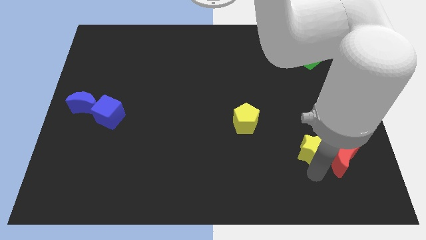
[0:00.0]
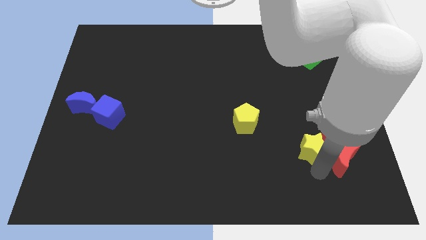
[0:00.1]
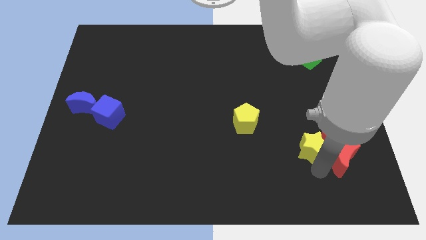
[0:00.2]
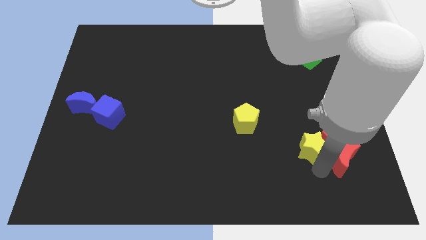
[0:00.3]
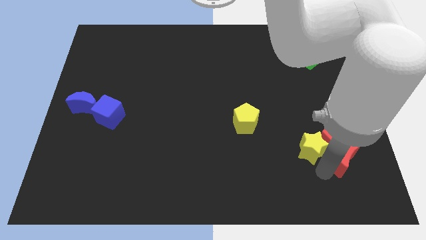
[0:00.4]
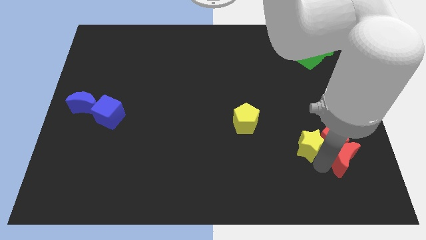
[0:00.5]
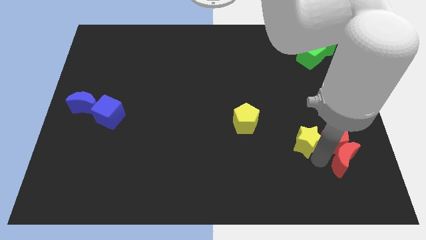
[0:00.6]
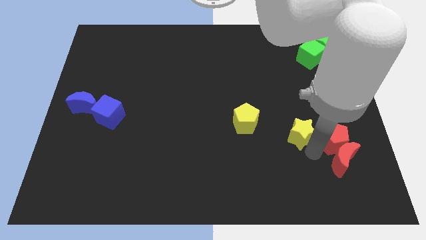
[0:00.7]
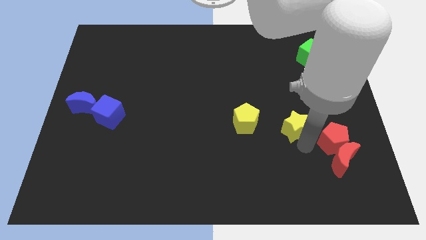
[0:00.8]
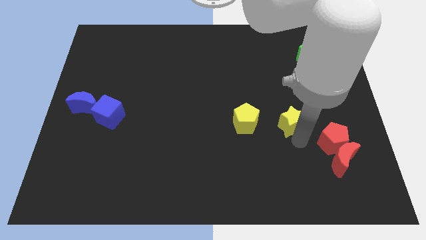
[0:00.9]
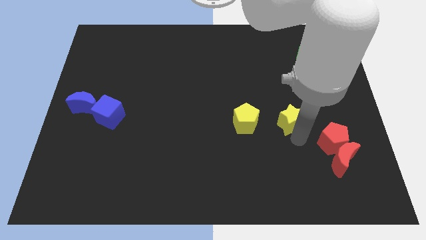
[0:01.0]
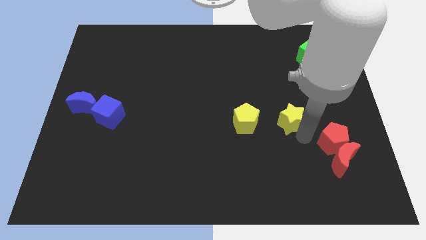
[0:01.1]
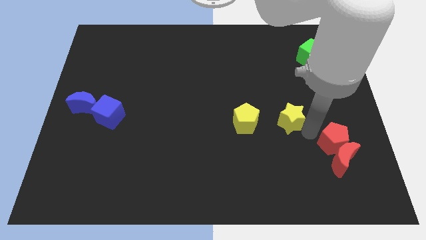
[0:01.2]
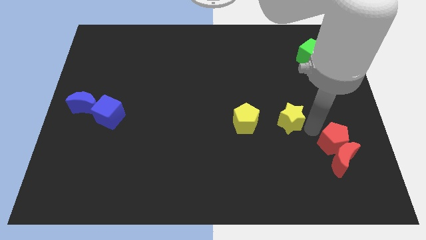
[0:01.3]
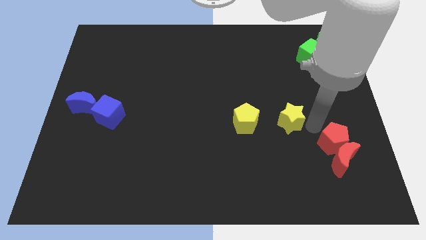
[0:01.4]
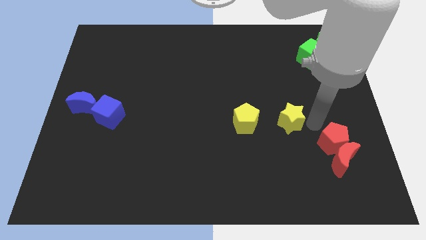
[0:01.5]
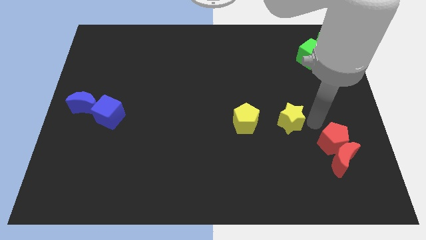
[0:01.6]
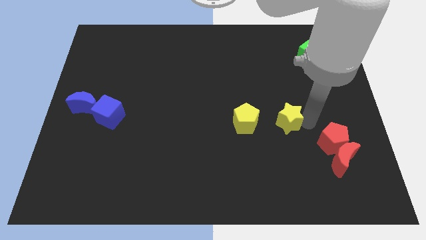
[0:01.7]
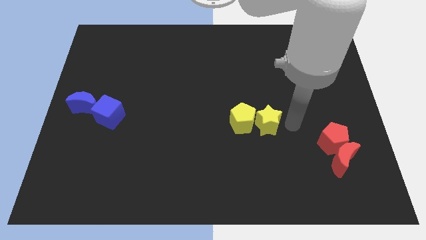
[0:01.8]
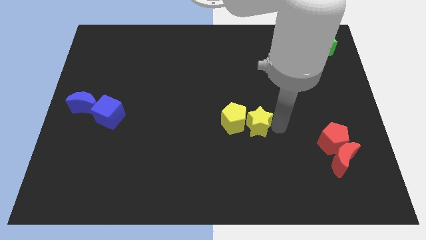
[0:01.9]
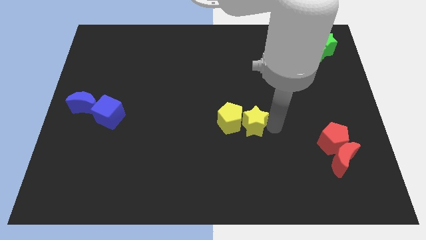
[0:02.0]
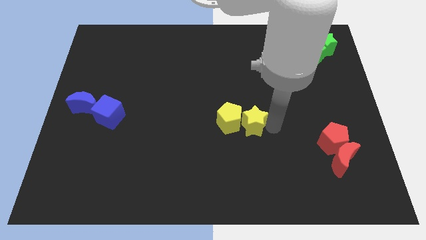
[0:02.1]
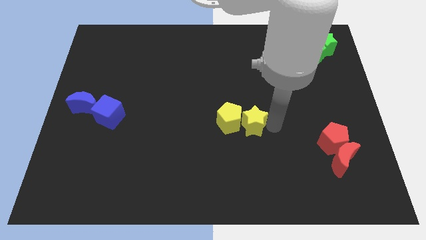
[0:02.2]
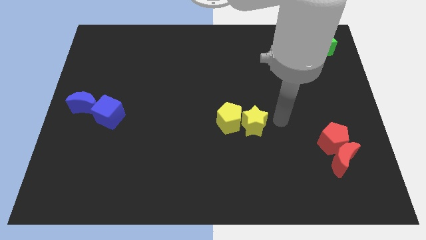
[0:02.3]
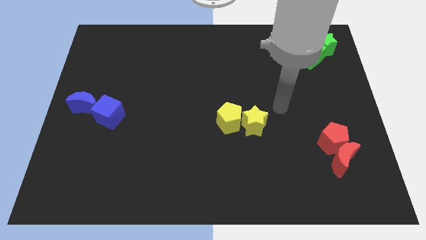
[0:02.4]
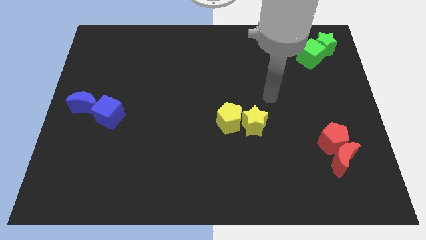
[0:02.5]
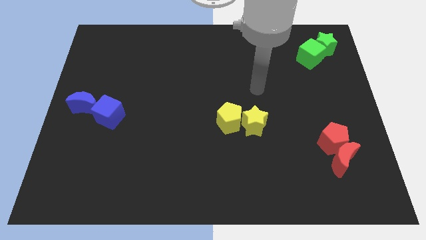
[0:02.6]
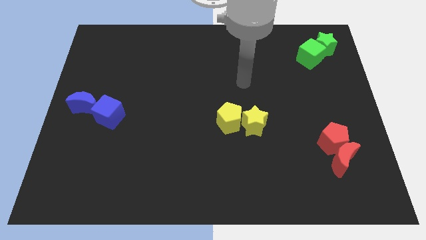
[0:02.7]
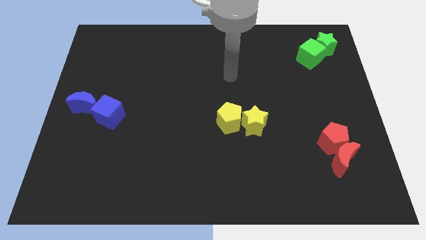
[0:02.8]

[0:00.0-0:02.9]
push the yellow star into yellow pentagon

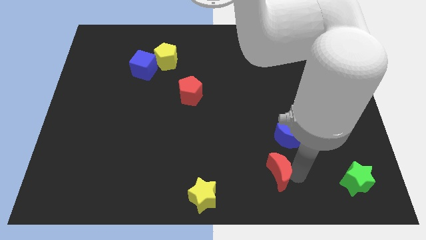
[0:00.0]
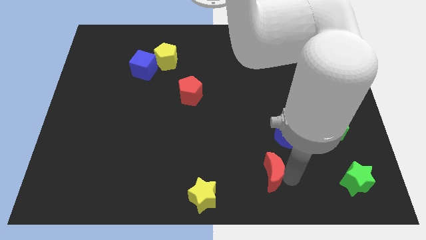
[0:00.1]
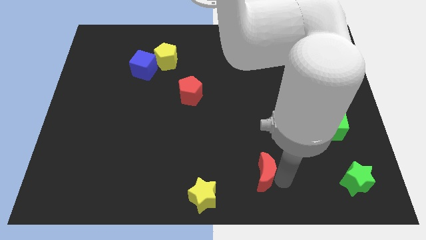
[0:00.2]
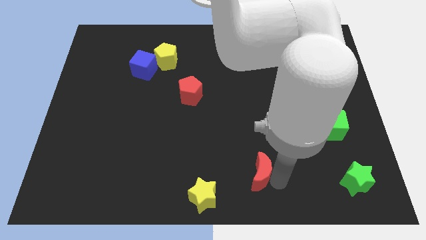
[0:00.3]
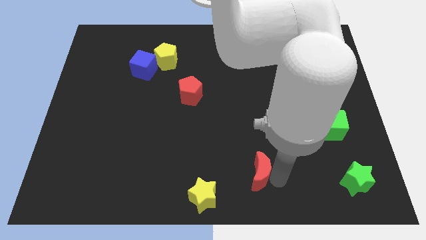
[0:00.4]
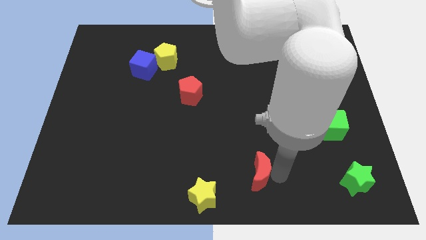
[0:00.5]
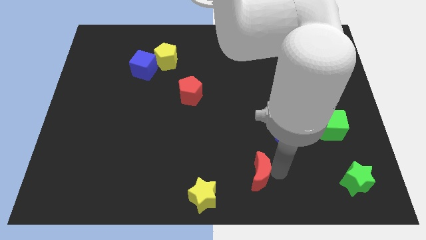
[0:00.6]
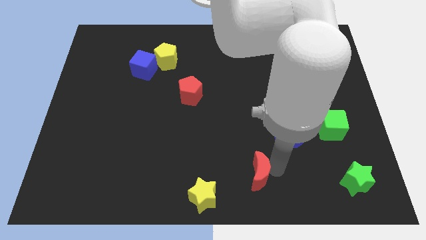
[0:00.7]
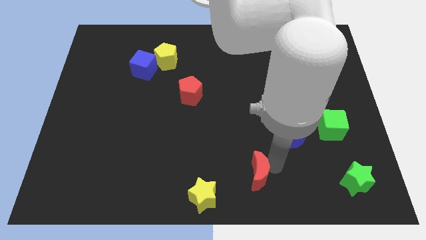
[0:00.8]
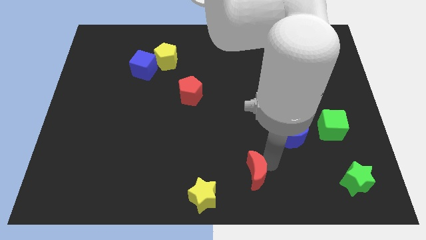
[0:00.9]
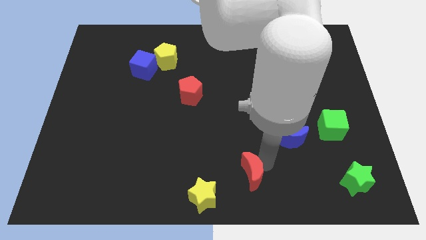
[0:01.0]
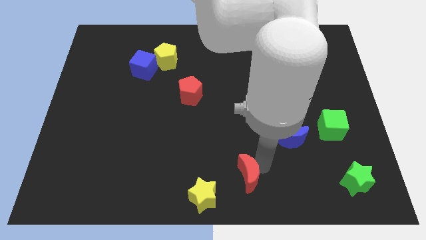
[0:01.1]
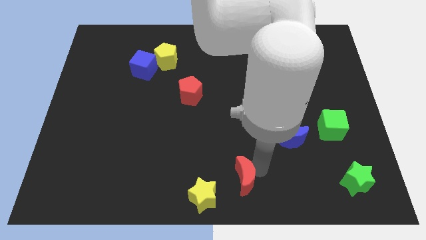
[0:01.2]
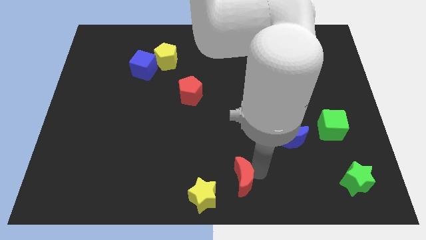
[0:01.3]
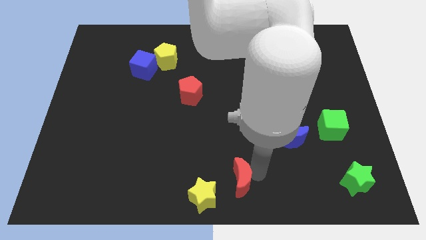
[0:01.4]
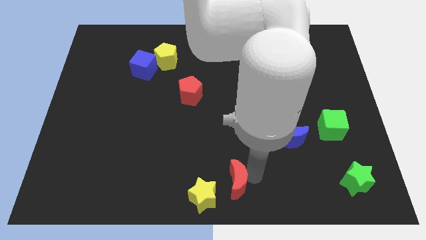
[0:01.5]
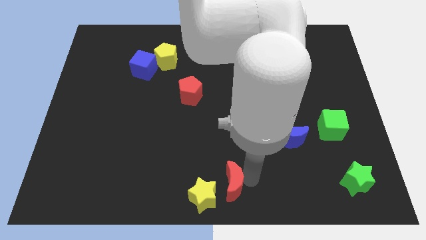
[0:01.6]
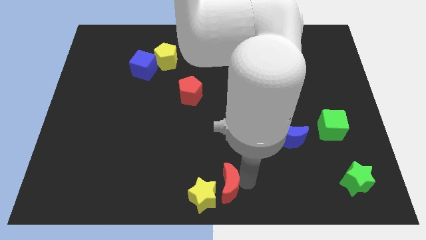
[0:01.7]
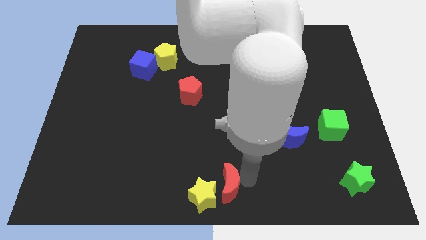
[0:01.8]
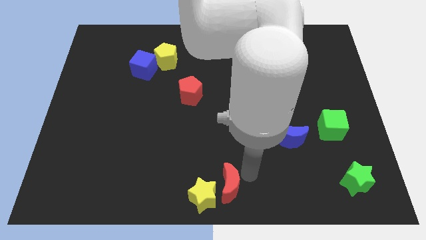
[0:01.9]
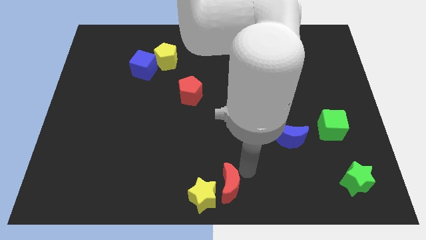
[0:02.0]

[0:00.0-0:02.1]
move red crescent towards the right side of yellow star

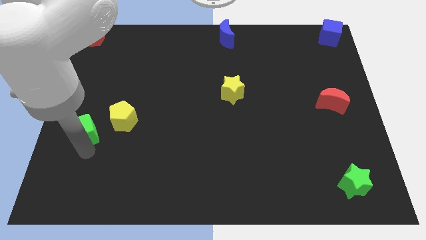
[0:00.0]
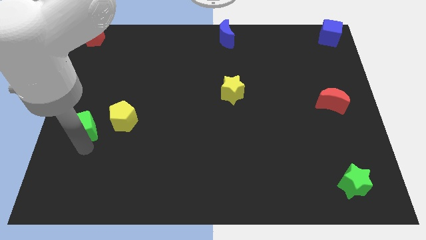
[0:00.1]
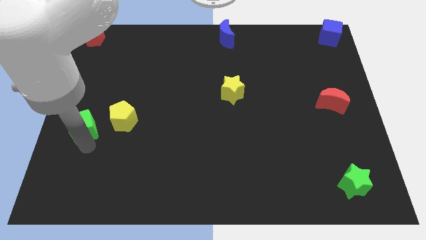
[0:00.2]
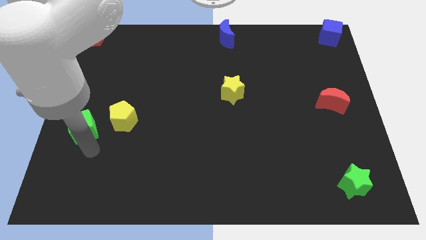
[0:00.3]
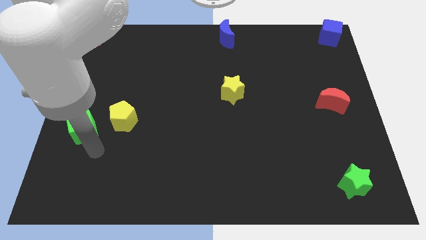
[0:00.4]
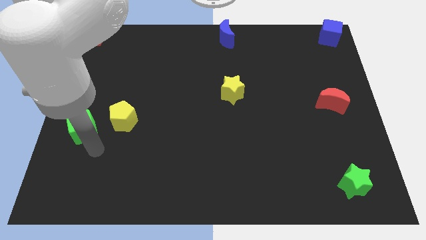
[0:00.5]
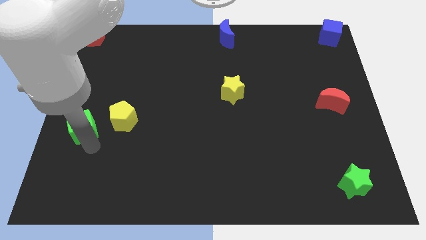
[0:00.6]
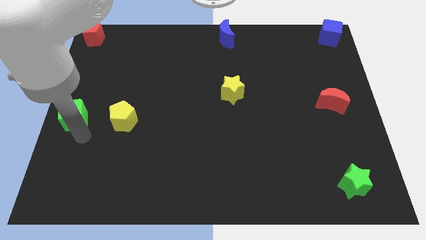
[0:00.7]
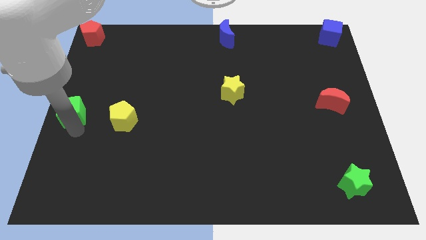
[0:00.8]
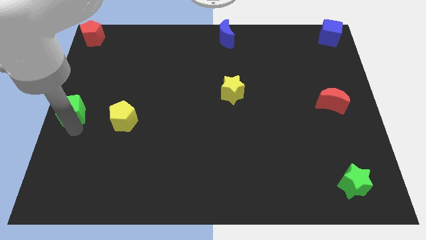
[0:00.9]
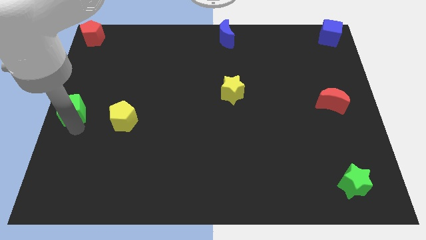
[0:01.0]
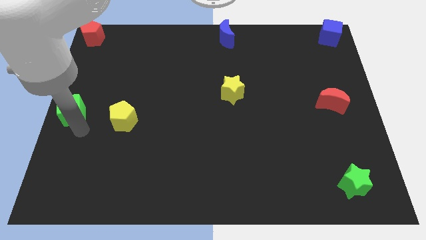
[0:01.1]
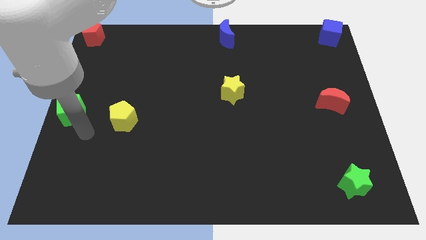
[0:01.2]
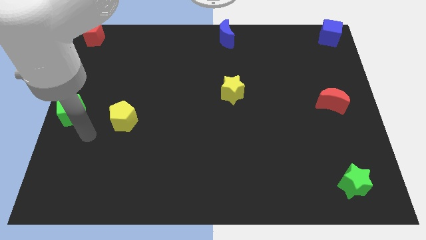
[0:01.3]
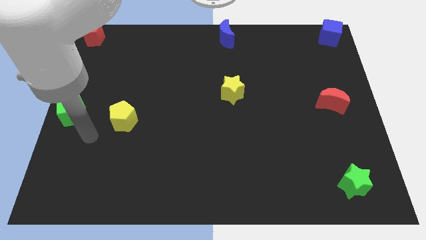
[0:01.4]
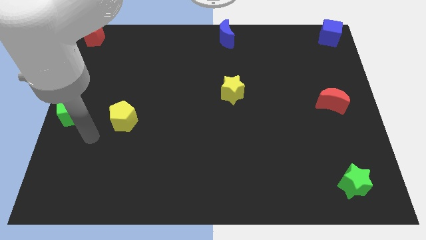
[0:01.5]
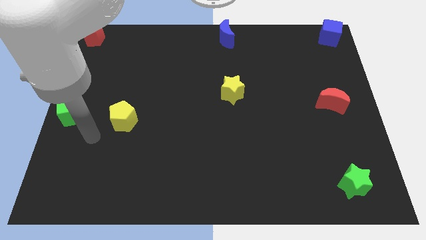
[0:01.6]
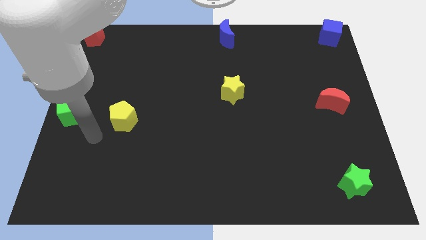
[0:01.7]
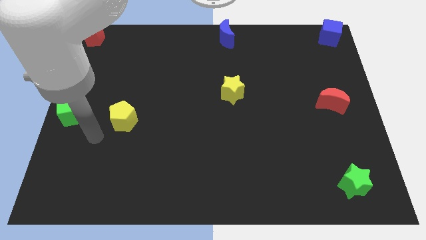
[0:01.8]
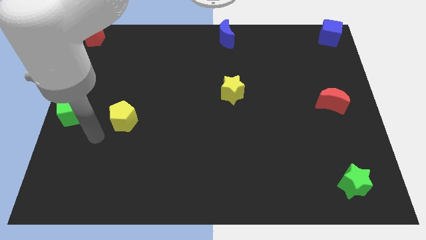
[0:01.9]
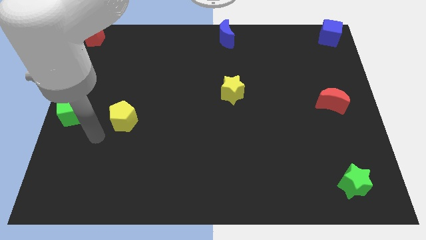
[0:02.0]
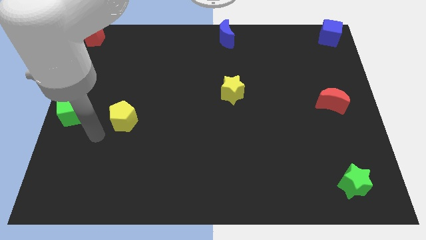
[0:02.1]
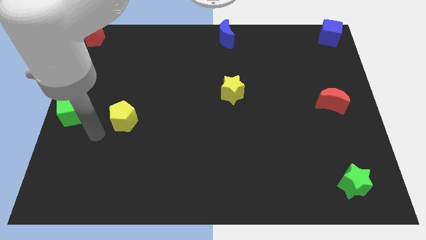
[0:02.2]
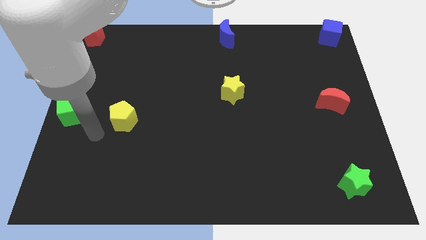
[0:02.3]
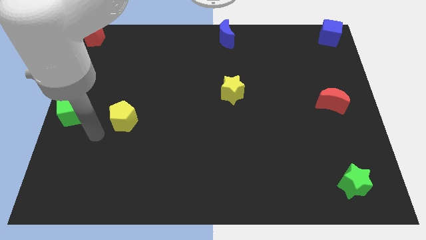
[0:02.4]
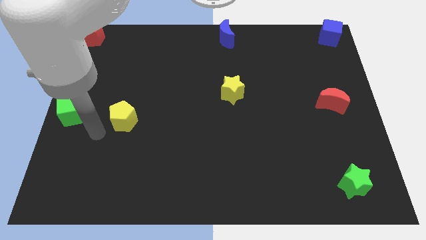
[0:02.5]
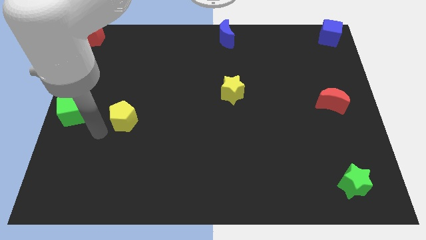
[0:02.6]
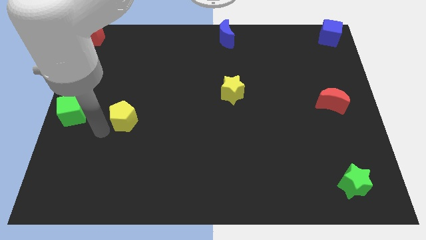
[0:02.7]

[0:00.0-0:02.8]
move the green cube slightly to the left center

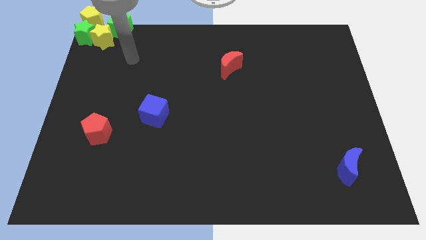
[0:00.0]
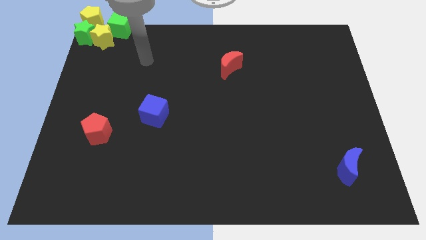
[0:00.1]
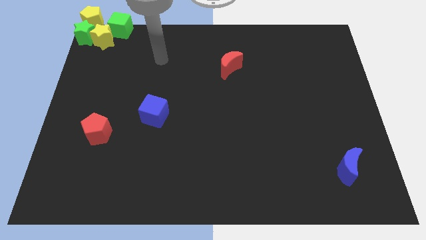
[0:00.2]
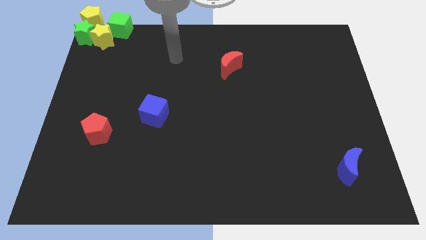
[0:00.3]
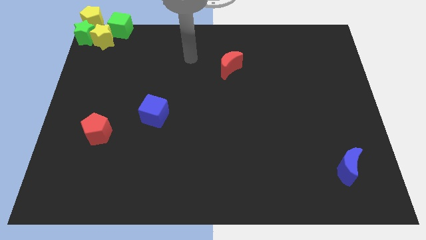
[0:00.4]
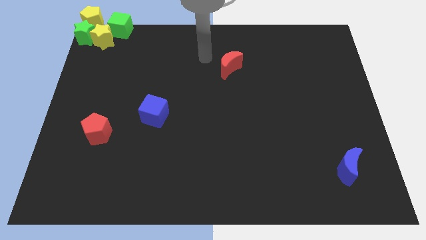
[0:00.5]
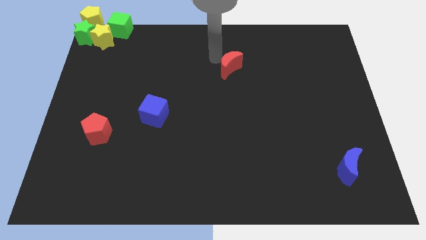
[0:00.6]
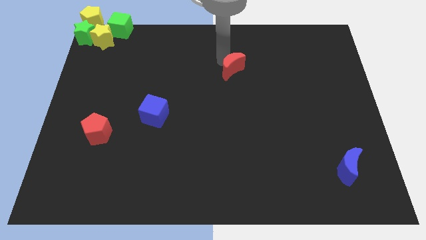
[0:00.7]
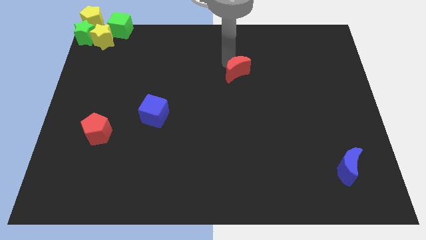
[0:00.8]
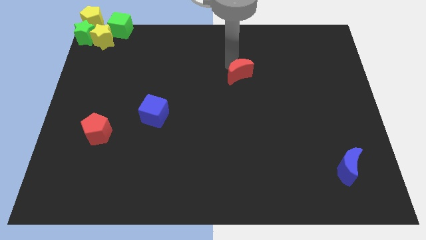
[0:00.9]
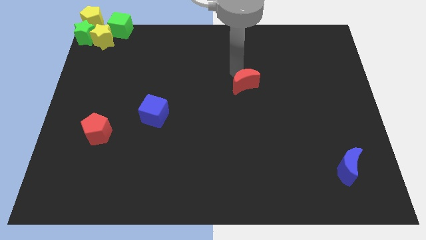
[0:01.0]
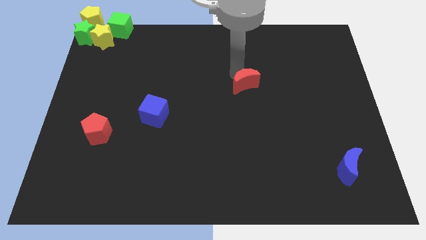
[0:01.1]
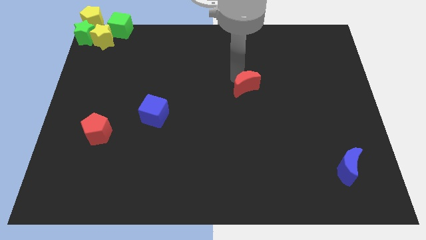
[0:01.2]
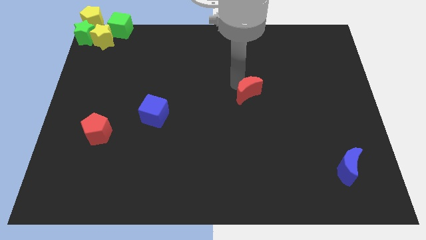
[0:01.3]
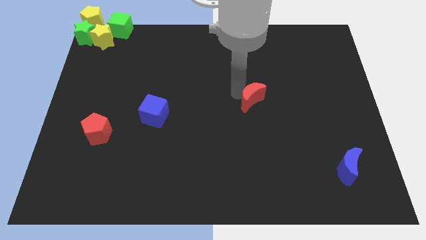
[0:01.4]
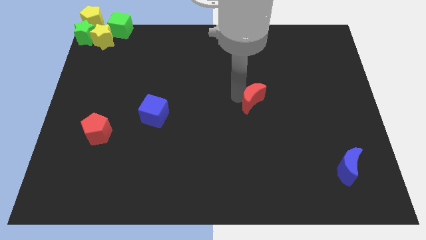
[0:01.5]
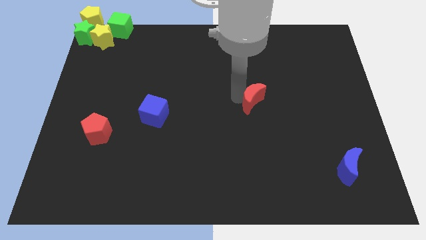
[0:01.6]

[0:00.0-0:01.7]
move the red crescent towards blue crescent
